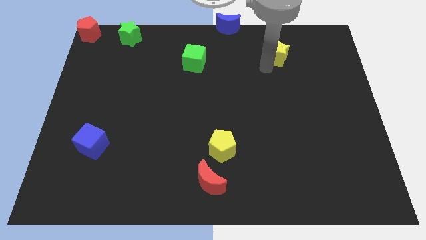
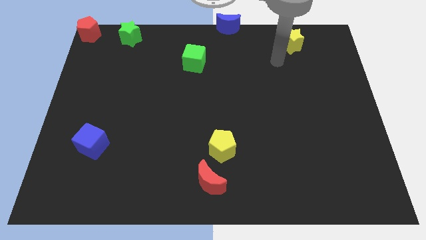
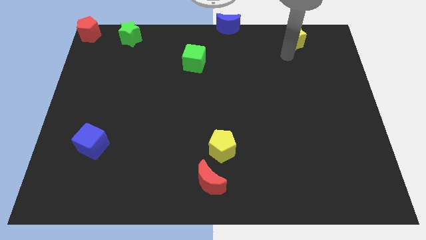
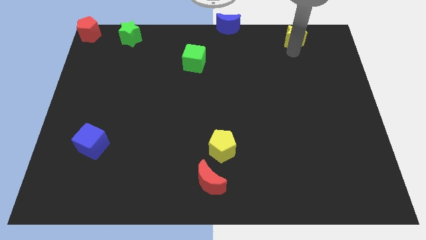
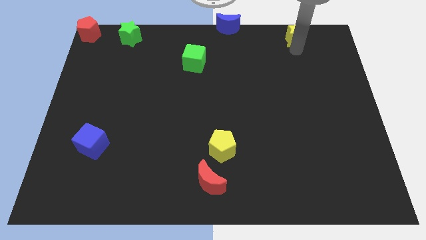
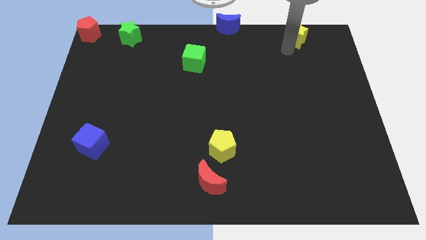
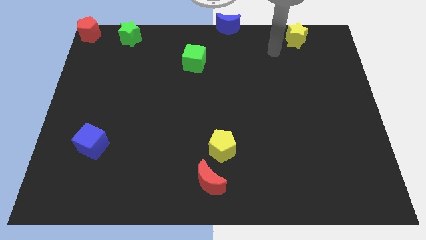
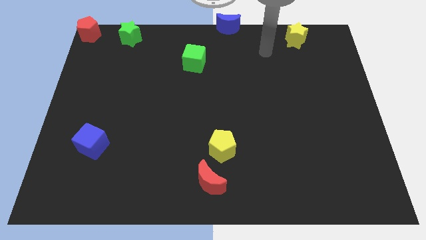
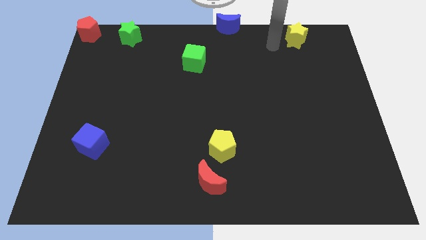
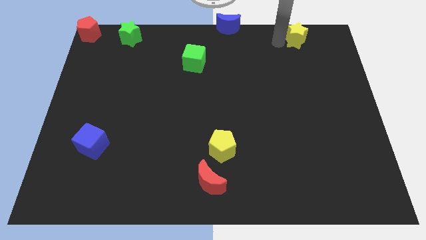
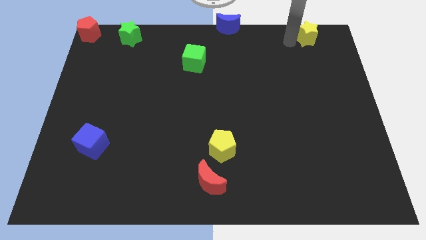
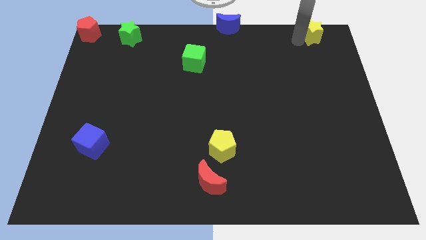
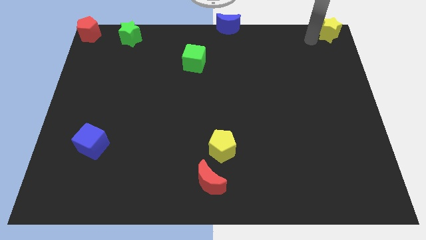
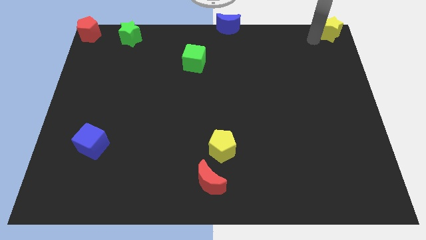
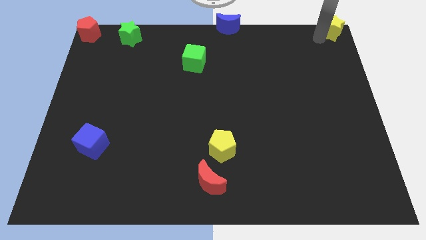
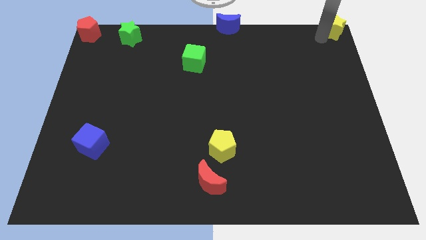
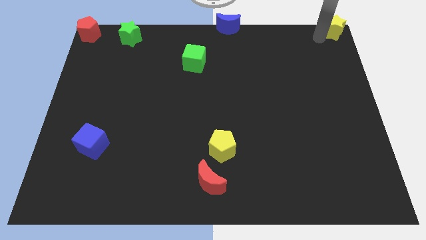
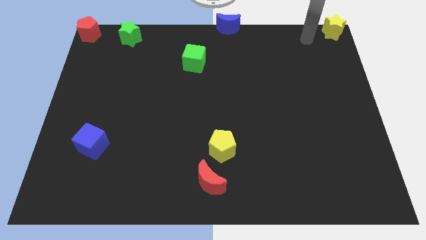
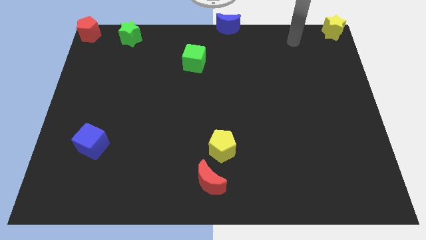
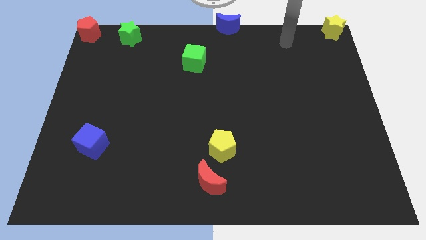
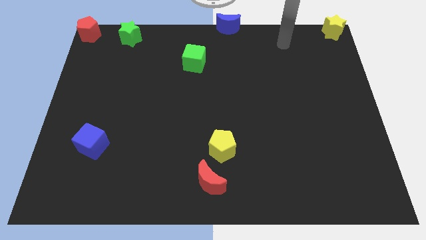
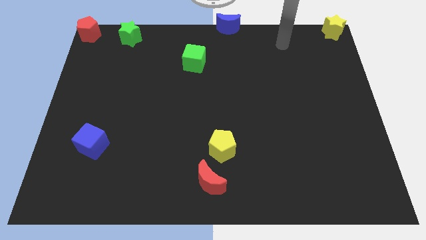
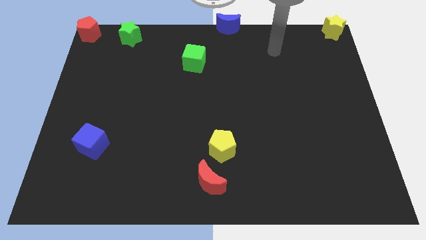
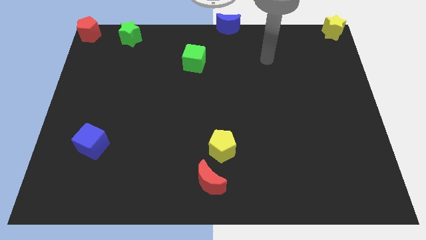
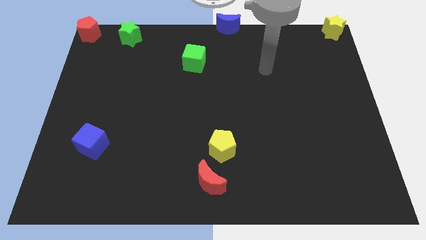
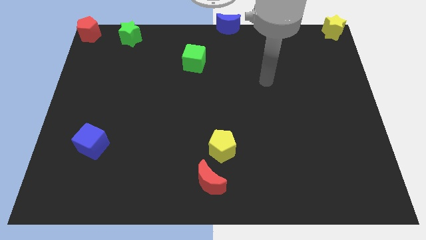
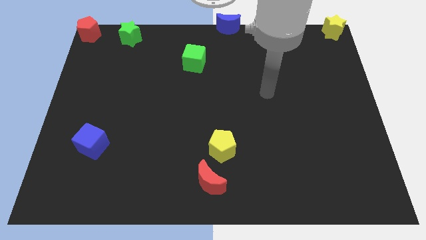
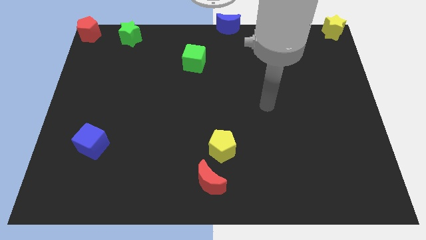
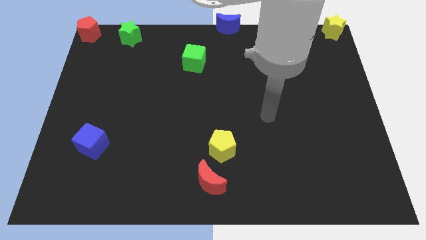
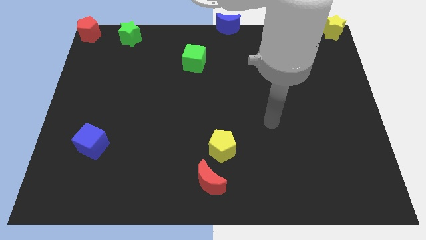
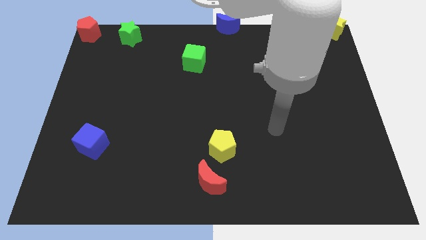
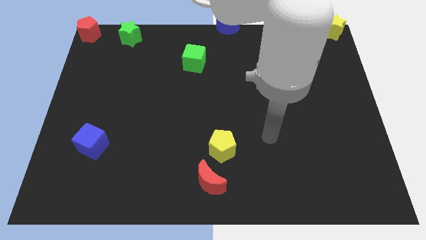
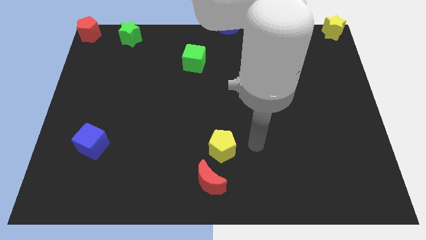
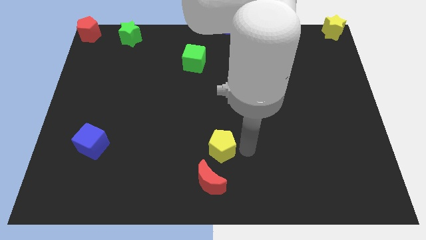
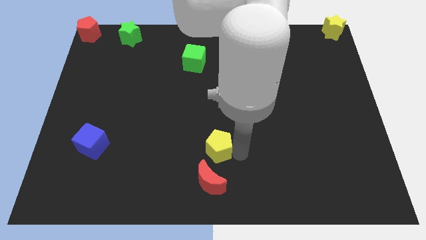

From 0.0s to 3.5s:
drag the yellow star to the top right corner

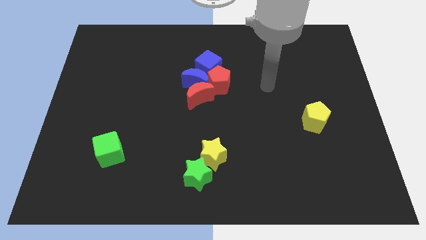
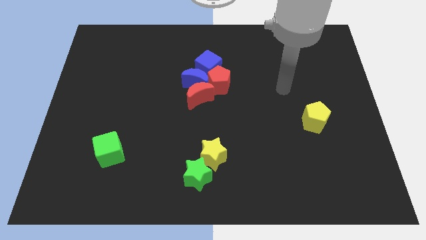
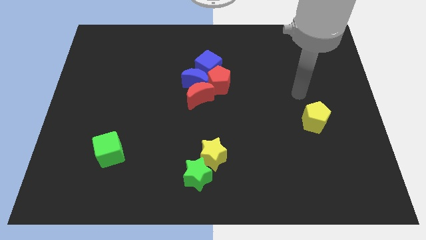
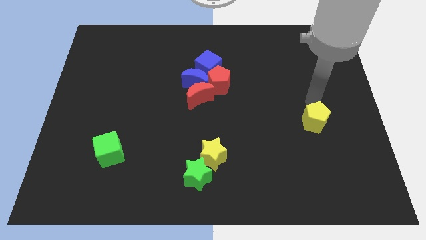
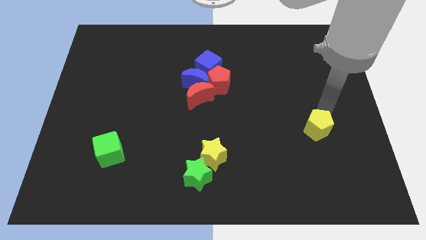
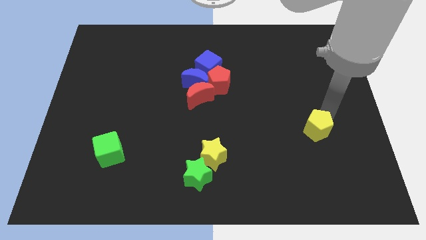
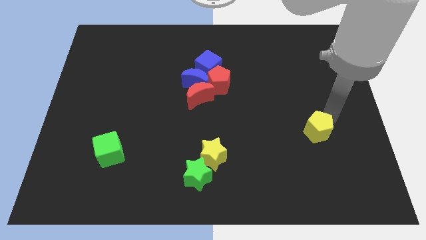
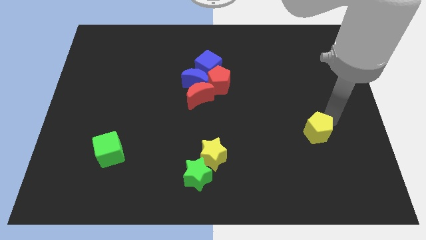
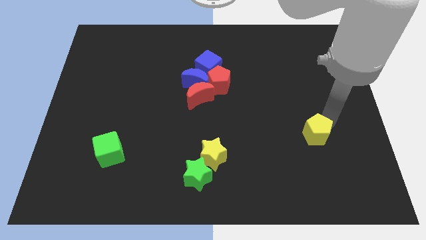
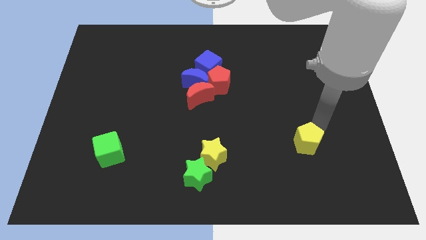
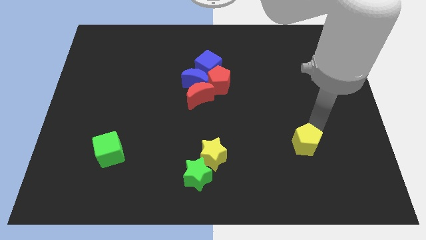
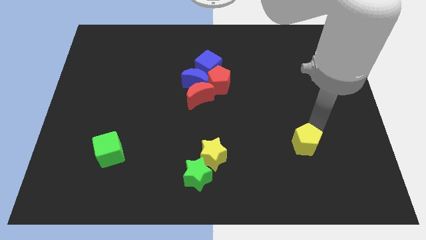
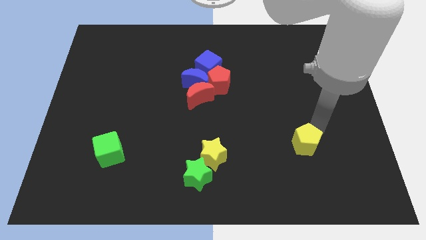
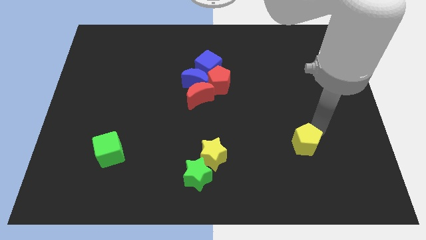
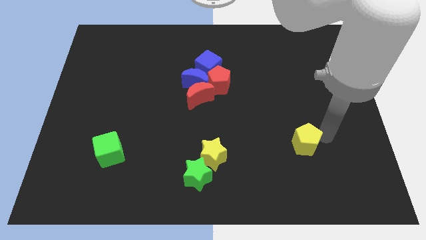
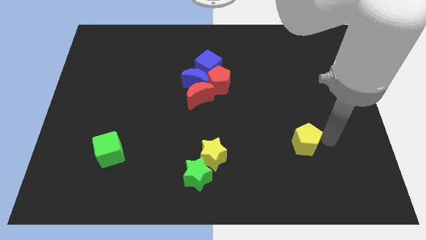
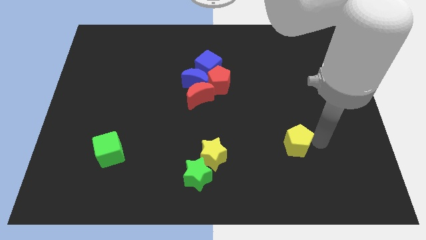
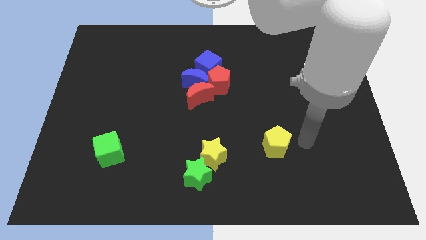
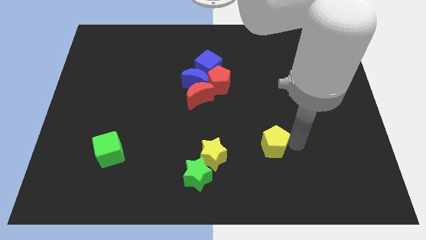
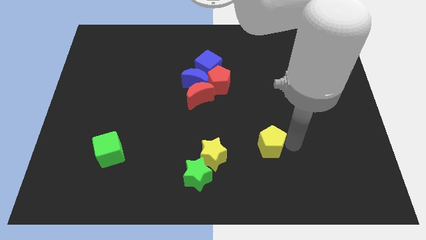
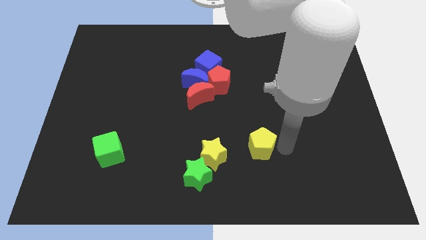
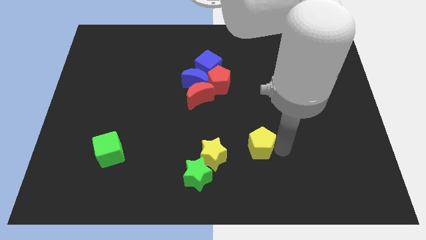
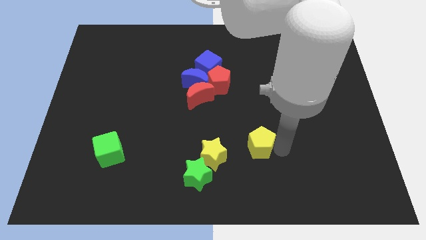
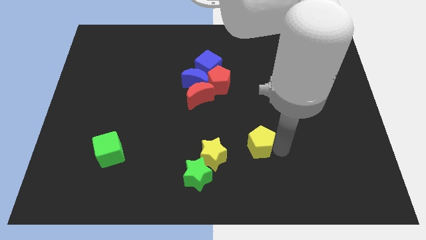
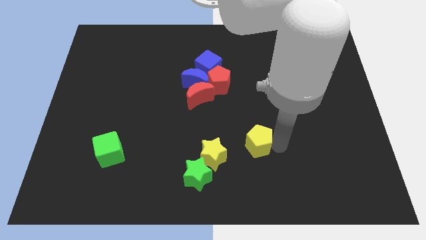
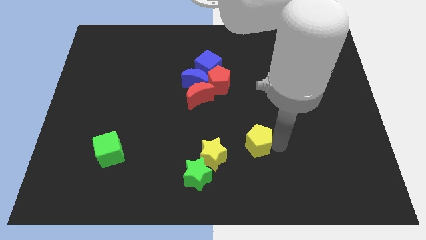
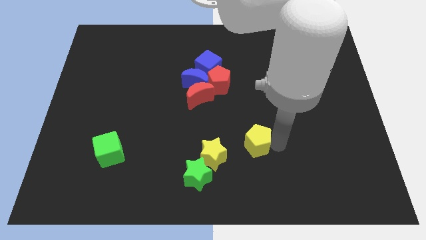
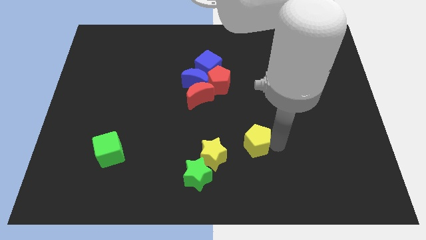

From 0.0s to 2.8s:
push the yellow pentagon towards the yellow star

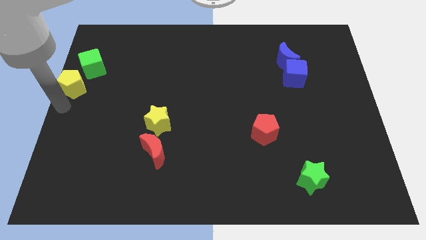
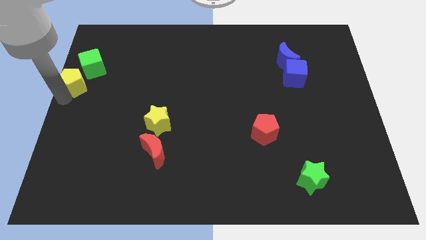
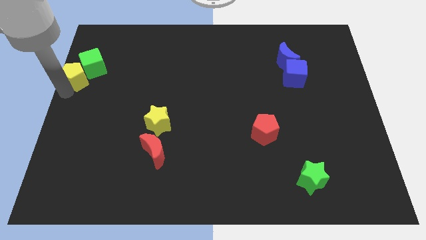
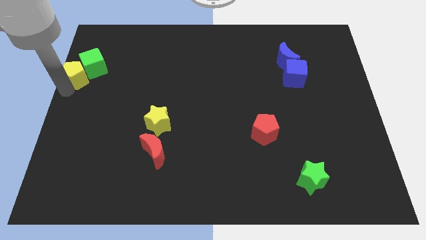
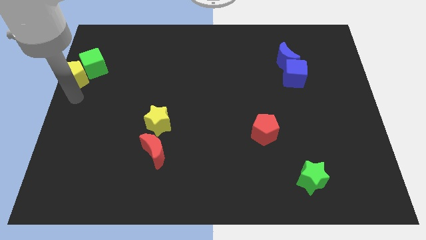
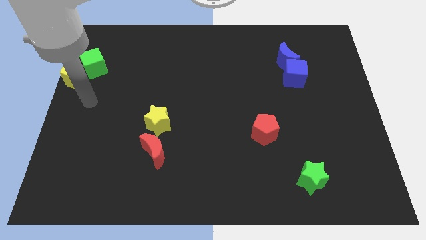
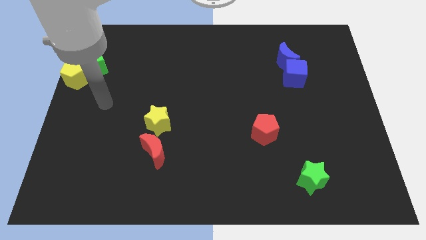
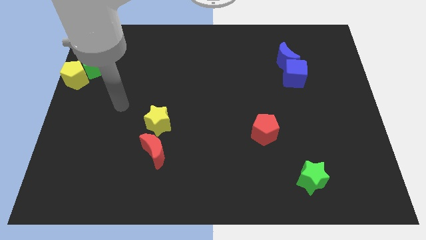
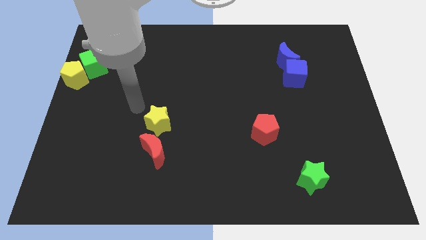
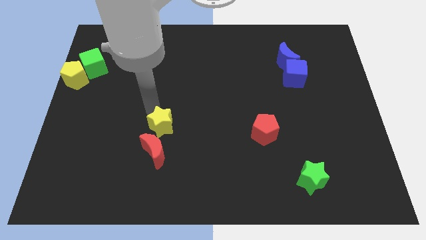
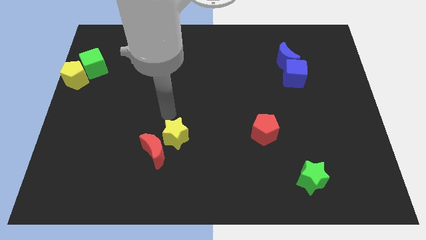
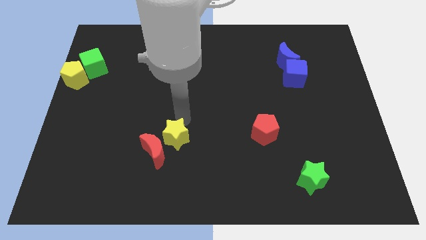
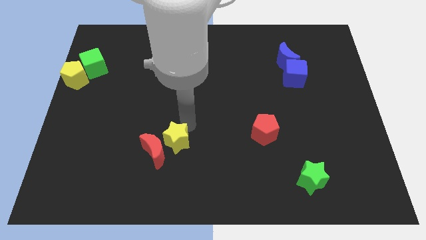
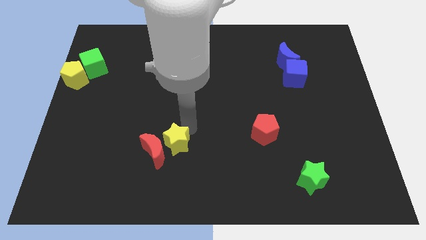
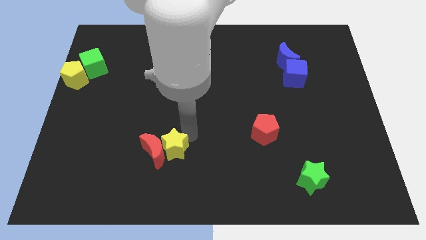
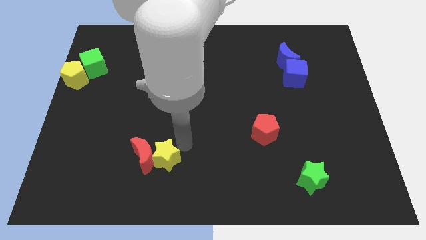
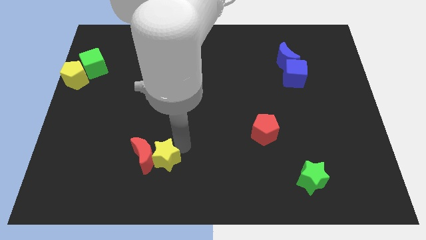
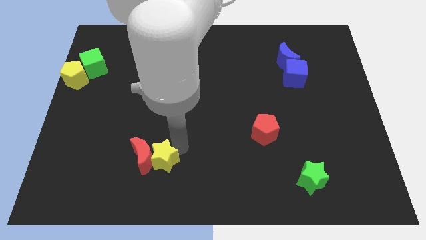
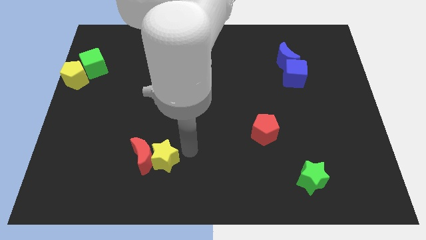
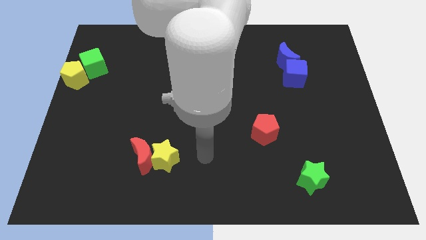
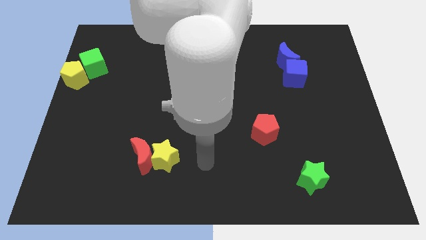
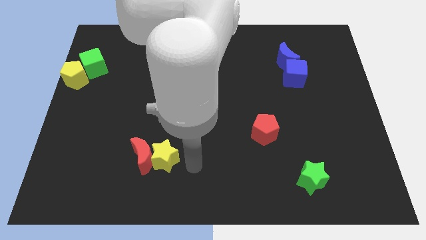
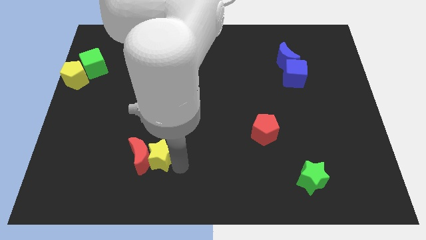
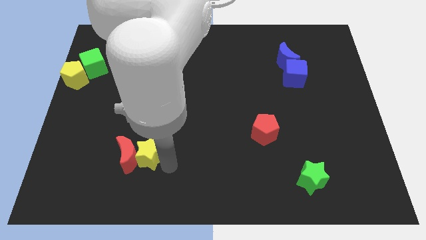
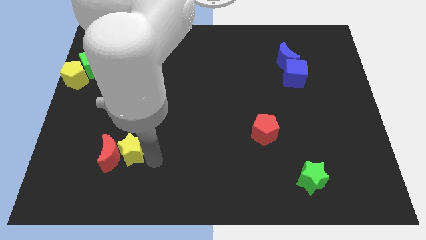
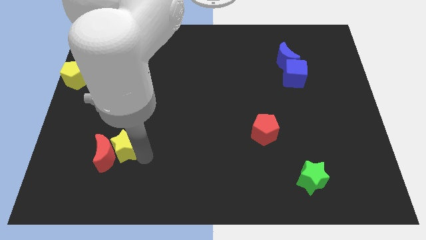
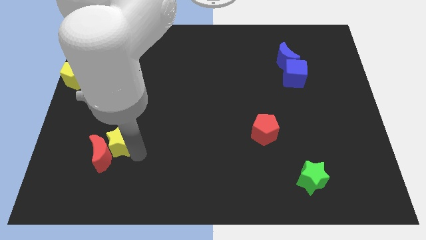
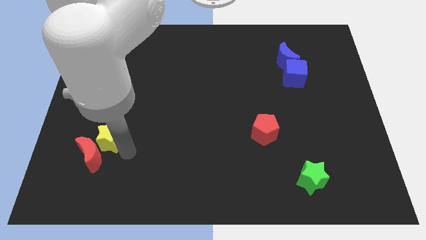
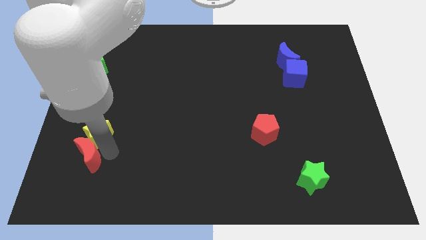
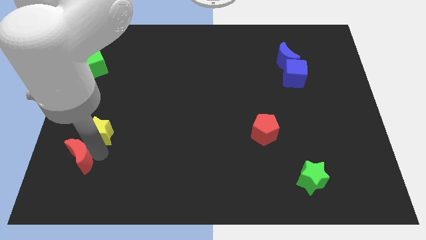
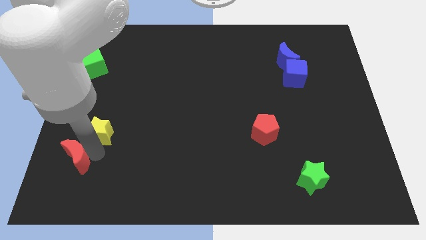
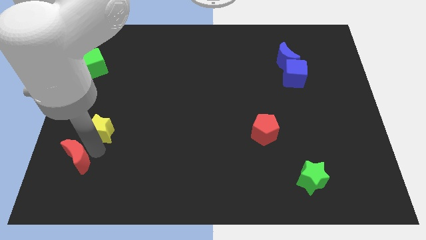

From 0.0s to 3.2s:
slide red moon and the yellow star to the bottom left
